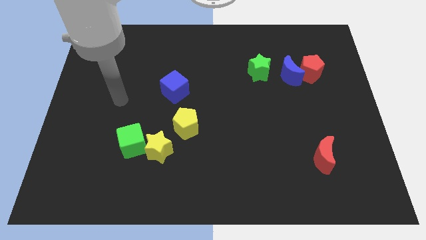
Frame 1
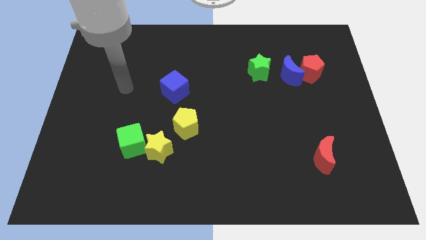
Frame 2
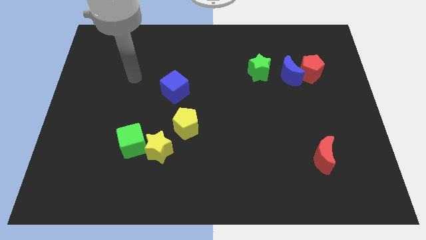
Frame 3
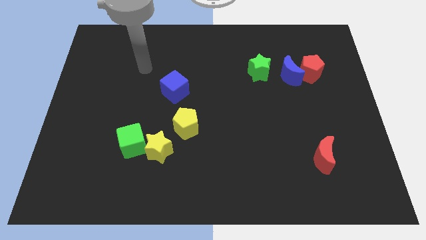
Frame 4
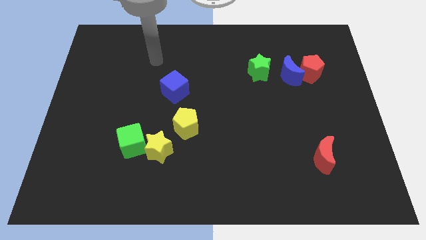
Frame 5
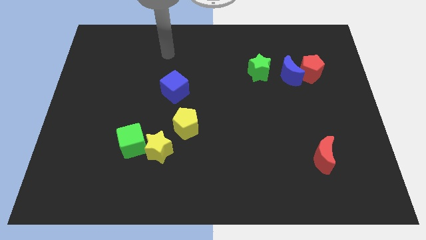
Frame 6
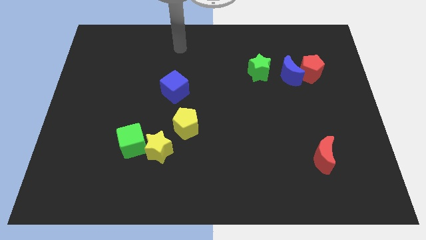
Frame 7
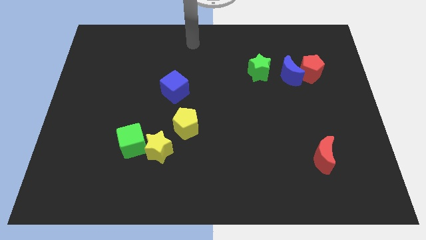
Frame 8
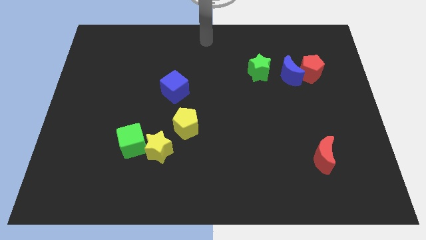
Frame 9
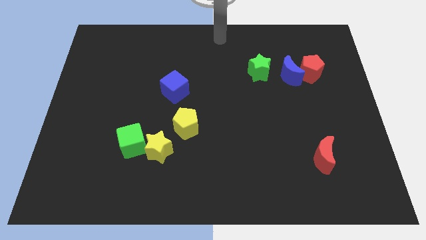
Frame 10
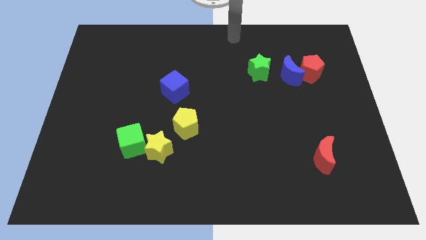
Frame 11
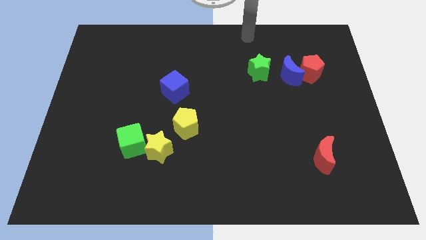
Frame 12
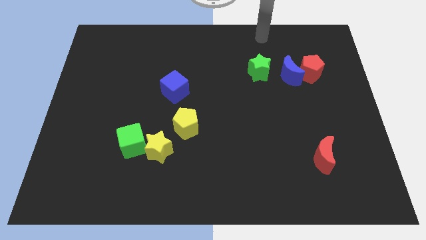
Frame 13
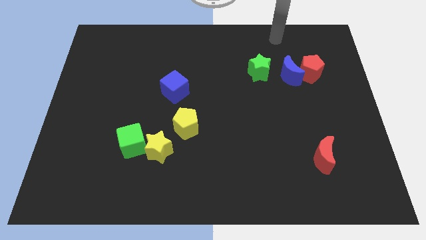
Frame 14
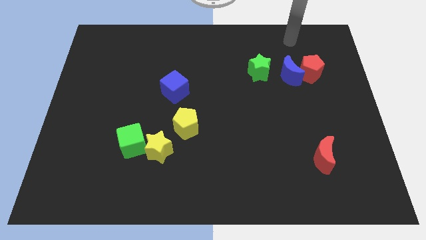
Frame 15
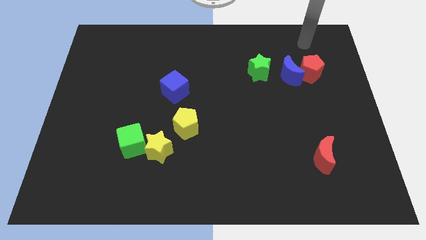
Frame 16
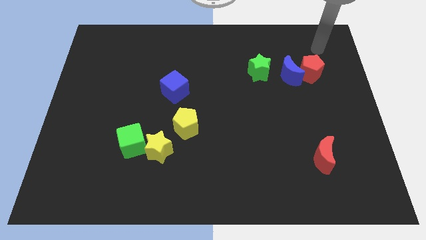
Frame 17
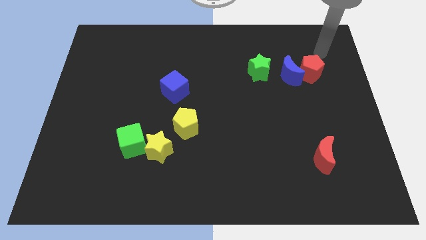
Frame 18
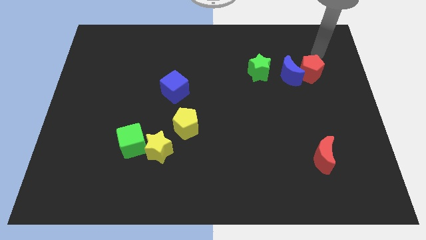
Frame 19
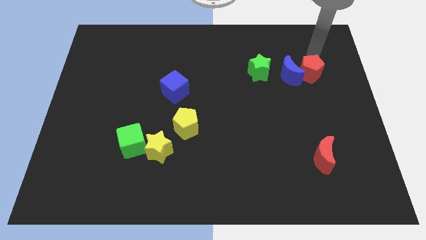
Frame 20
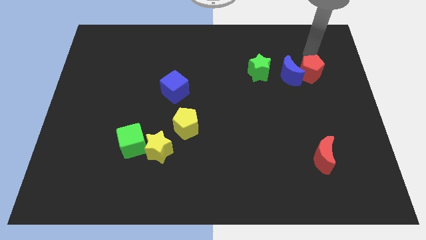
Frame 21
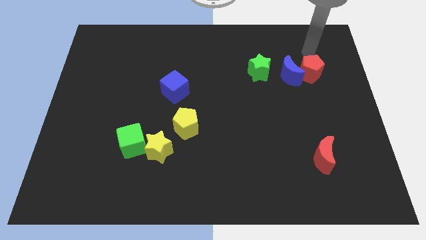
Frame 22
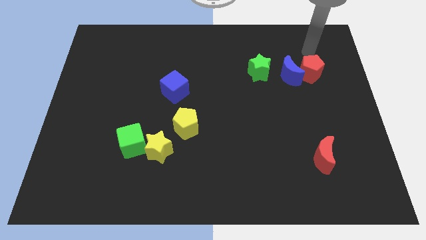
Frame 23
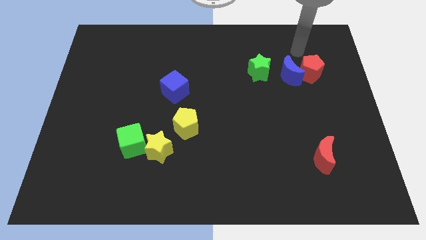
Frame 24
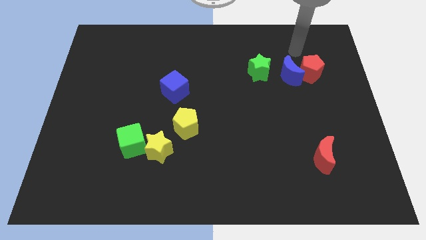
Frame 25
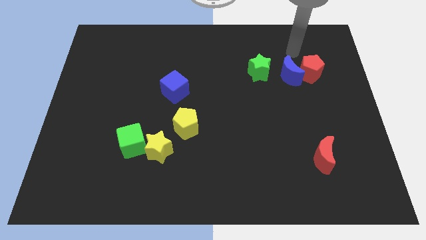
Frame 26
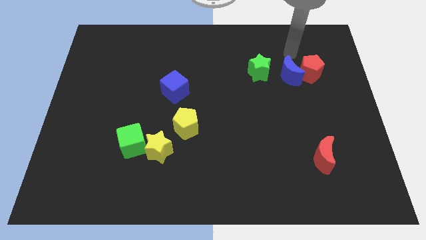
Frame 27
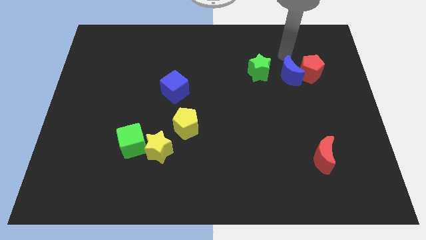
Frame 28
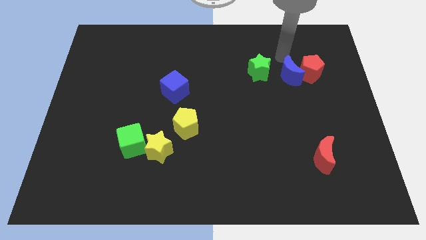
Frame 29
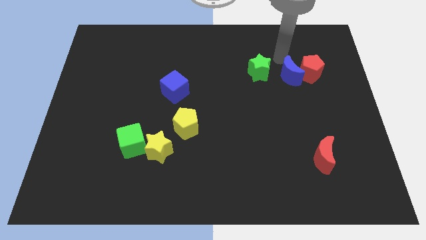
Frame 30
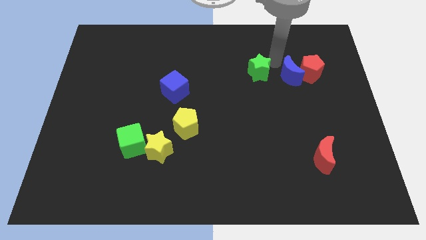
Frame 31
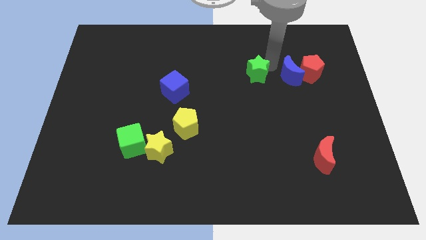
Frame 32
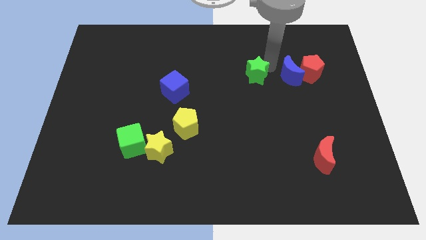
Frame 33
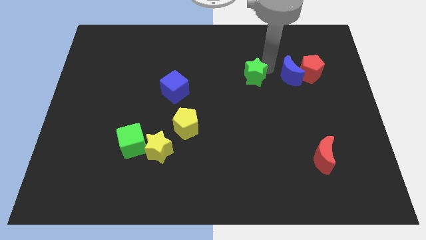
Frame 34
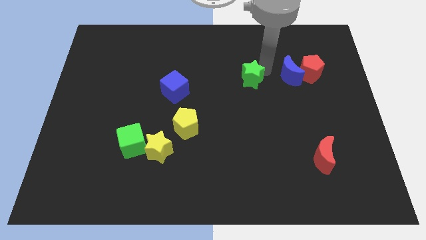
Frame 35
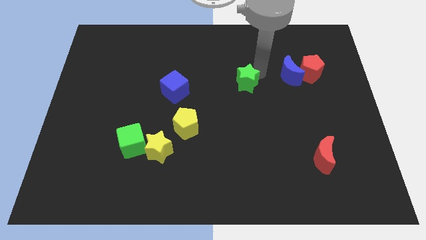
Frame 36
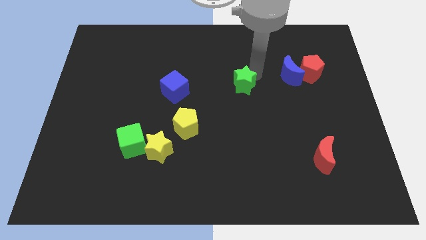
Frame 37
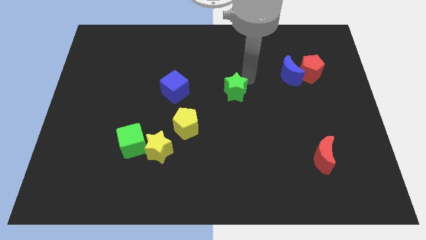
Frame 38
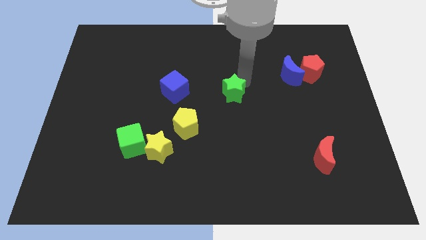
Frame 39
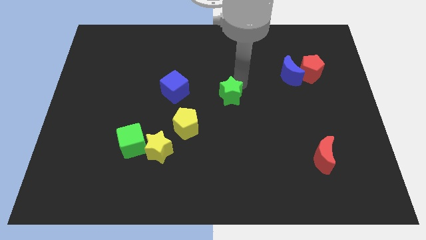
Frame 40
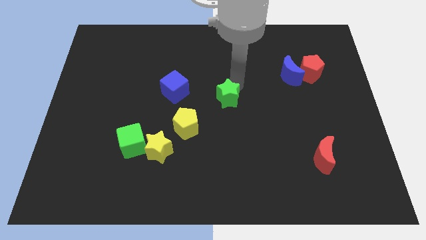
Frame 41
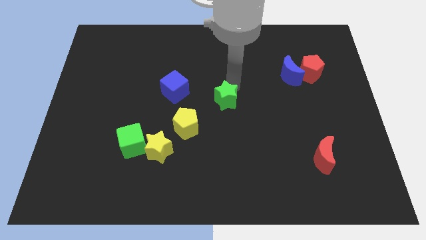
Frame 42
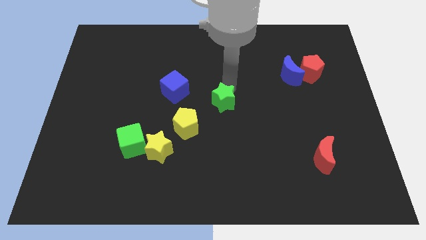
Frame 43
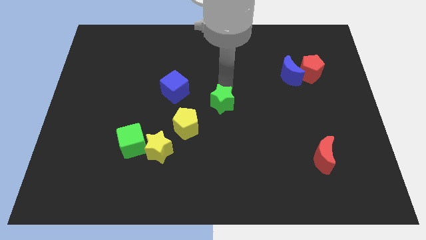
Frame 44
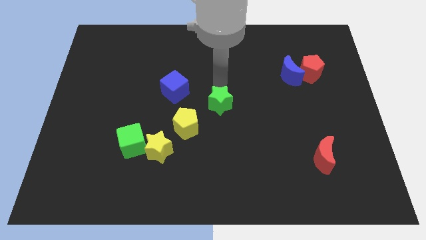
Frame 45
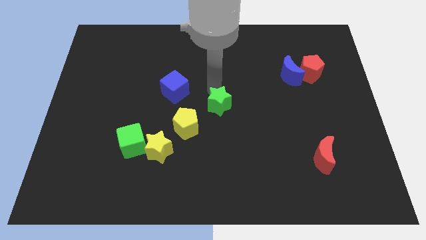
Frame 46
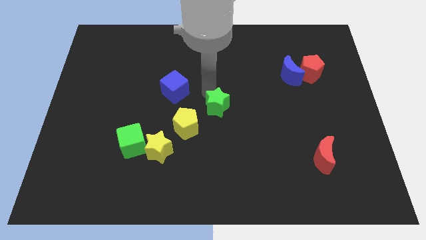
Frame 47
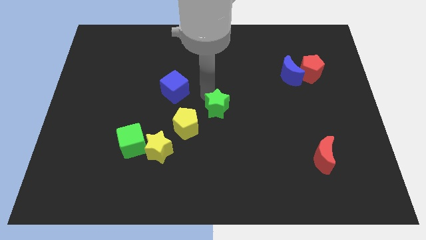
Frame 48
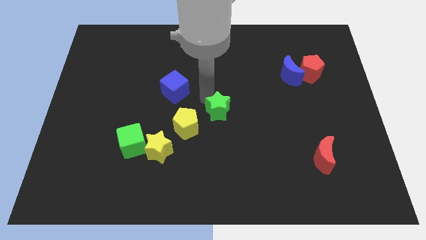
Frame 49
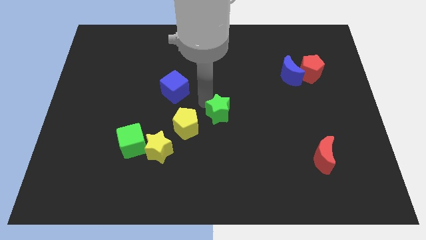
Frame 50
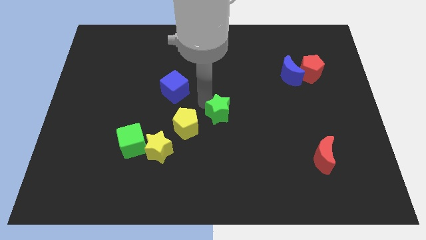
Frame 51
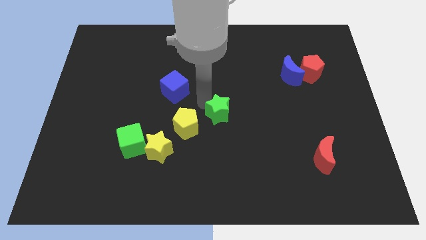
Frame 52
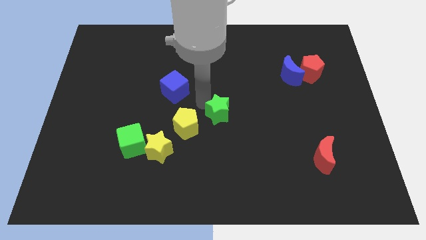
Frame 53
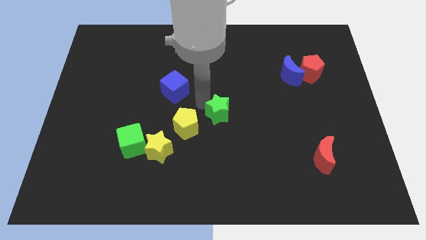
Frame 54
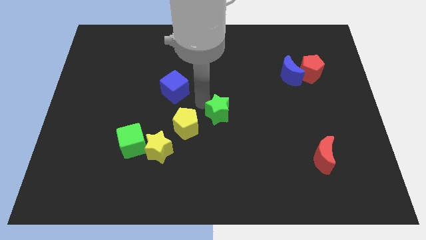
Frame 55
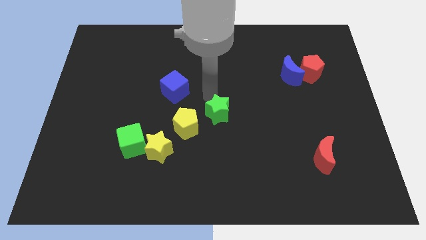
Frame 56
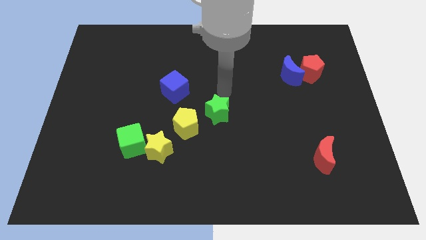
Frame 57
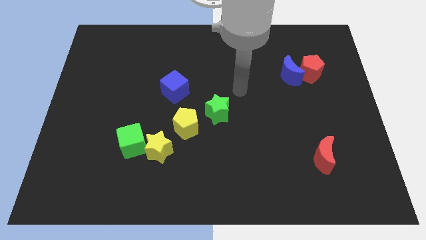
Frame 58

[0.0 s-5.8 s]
separate the green star from the blue moon

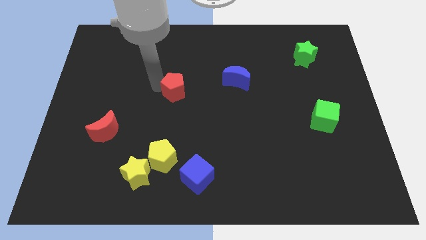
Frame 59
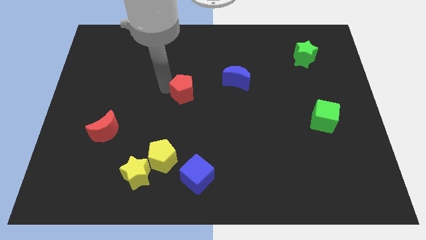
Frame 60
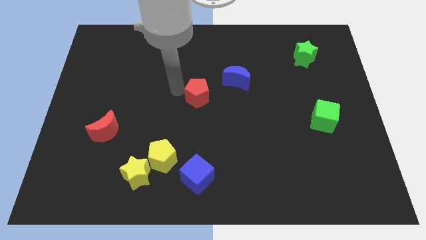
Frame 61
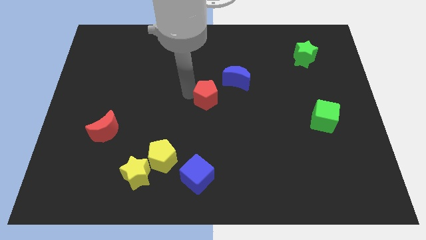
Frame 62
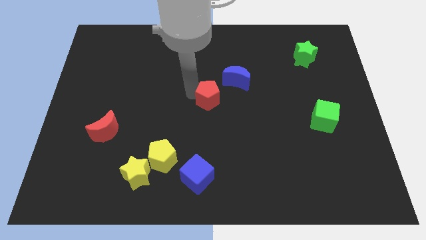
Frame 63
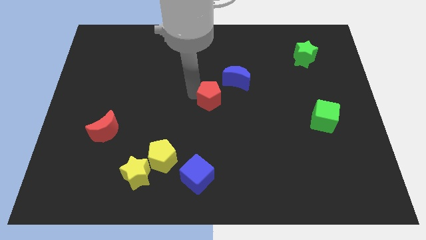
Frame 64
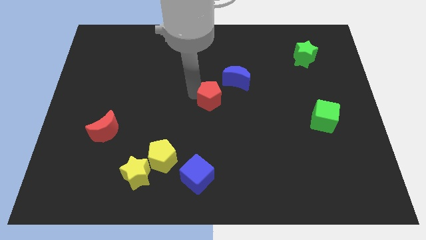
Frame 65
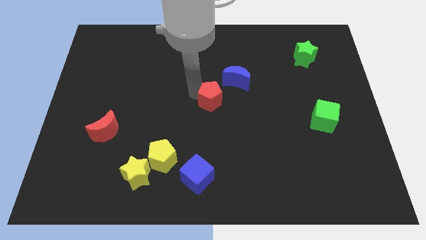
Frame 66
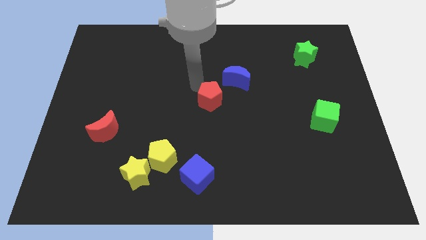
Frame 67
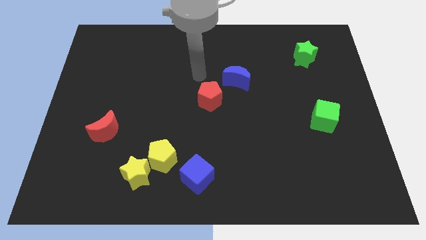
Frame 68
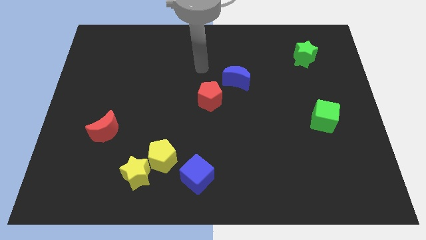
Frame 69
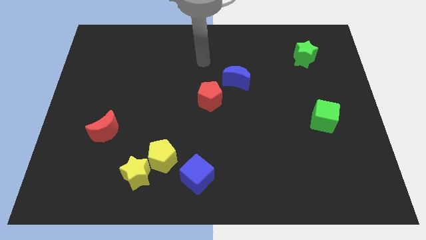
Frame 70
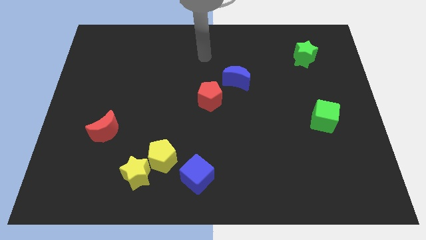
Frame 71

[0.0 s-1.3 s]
push the red pentagon to the bottom left of the blue crescent

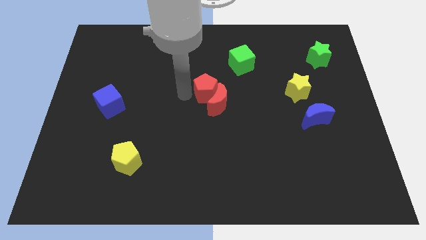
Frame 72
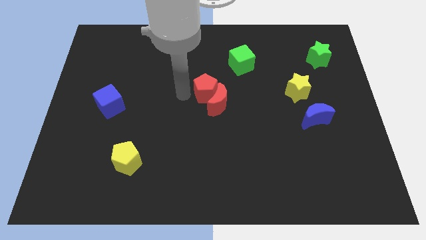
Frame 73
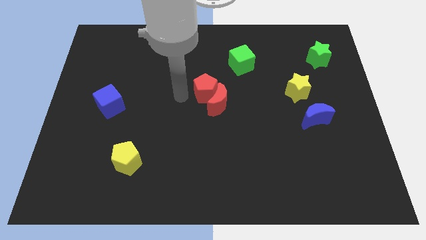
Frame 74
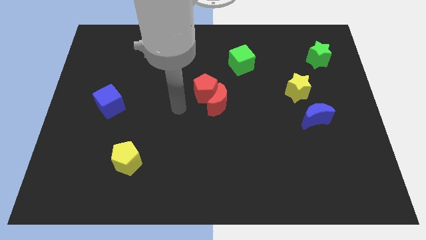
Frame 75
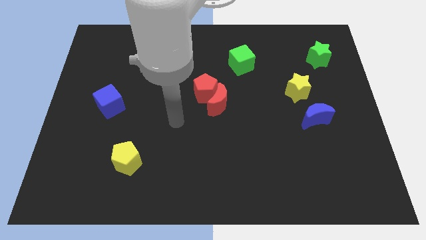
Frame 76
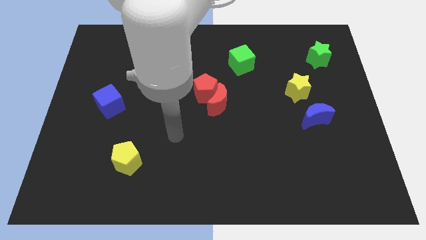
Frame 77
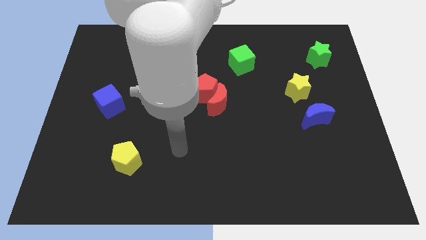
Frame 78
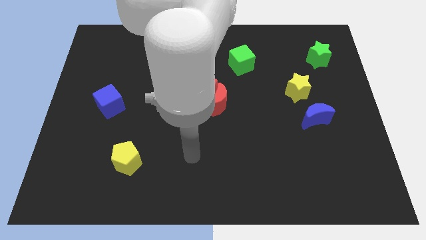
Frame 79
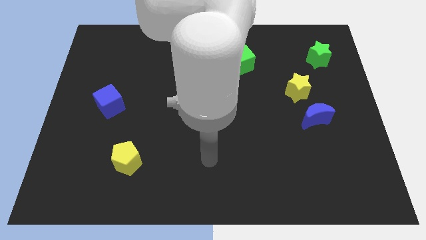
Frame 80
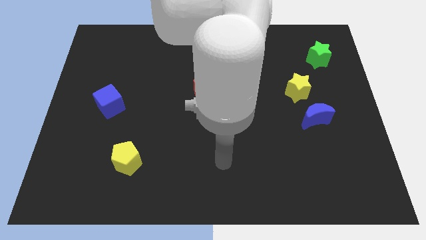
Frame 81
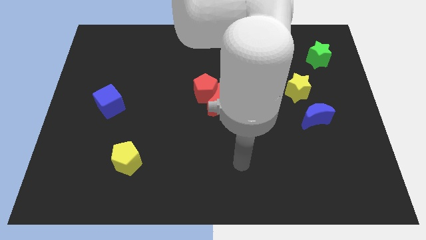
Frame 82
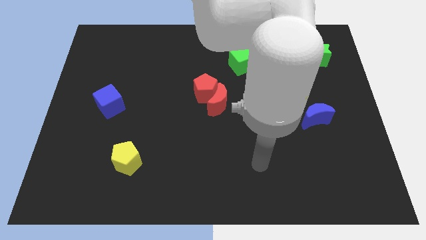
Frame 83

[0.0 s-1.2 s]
move the arm away from the red pentagon

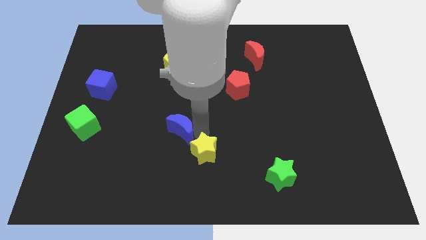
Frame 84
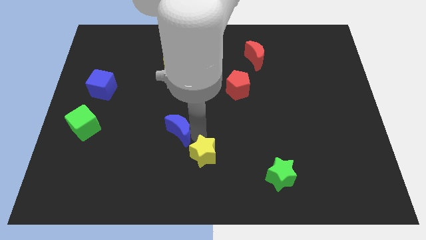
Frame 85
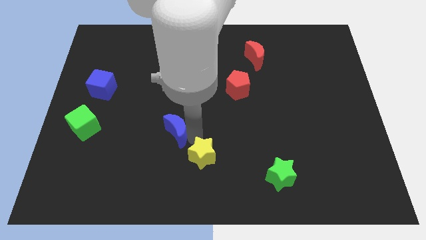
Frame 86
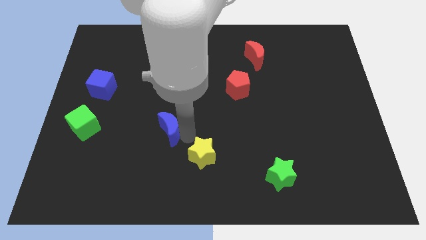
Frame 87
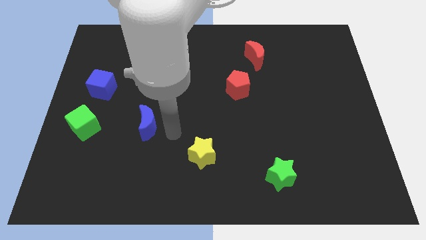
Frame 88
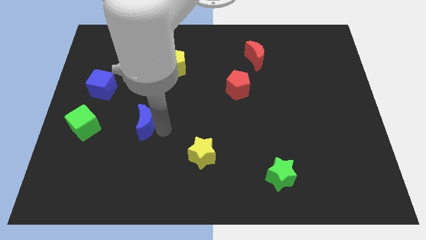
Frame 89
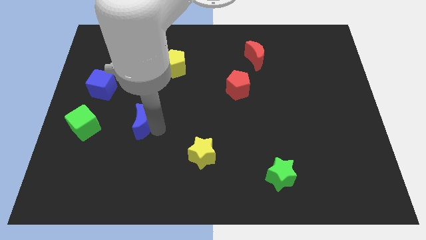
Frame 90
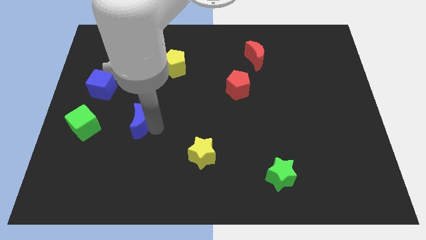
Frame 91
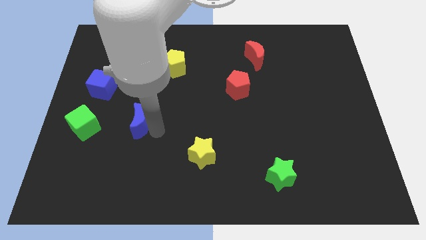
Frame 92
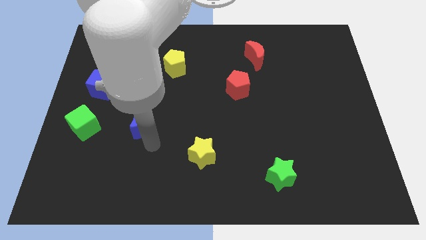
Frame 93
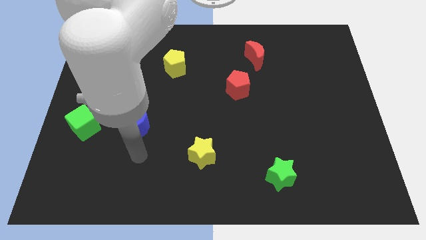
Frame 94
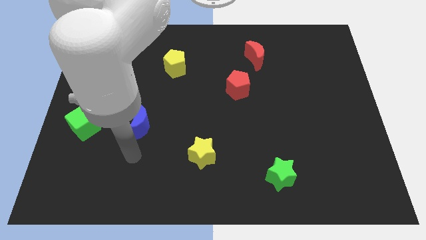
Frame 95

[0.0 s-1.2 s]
place blue crescent to the right of the green cube
